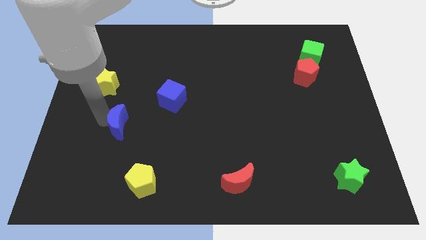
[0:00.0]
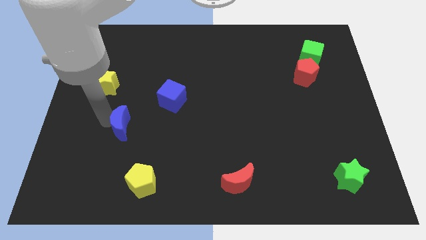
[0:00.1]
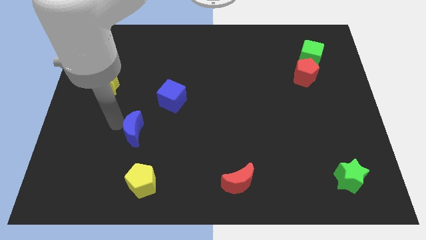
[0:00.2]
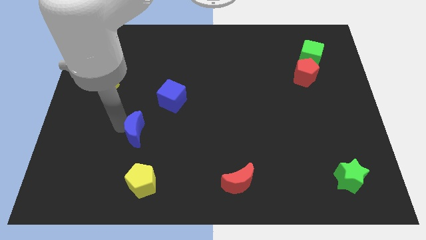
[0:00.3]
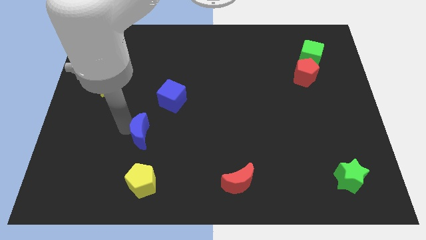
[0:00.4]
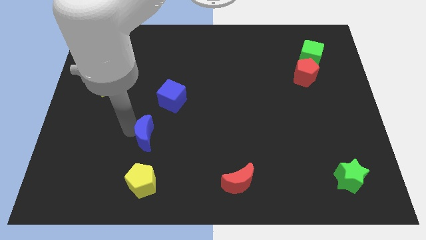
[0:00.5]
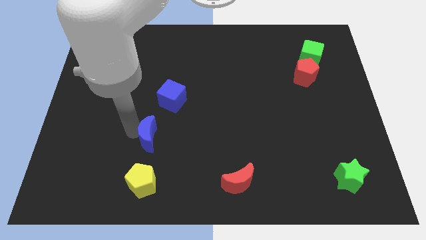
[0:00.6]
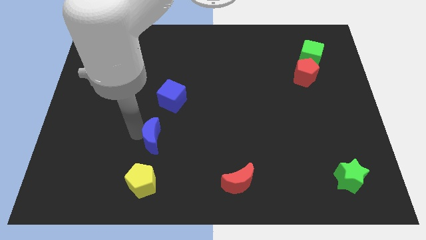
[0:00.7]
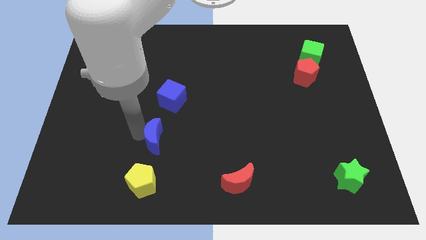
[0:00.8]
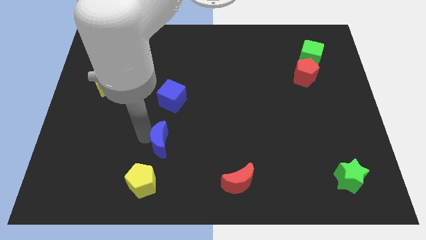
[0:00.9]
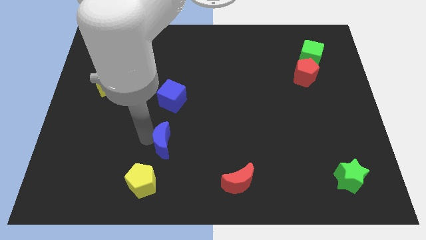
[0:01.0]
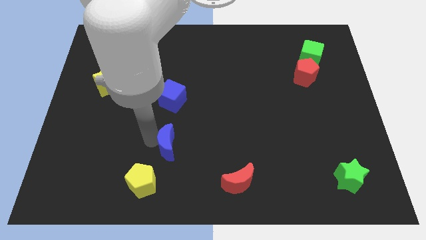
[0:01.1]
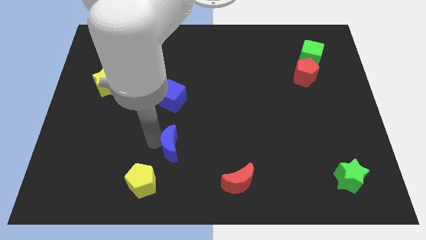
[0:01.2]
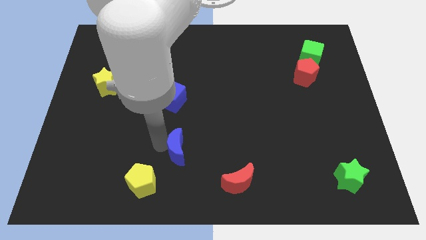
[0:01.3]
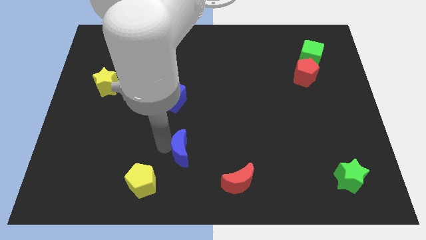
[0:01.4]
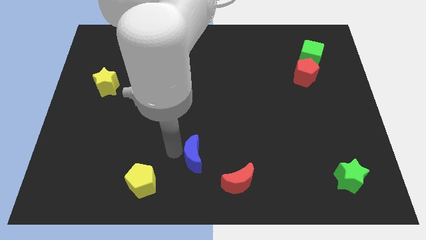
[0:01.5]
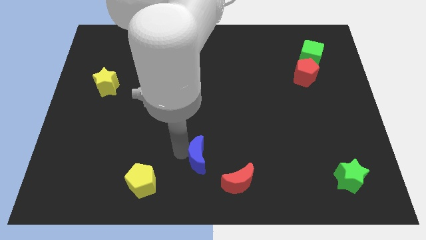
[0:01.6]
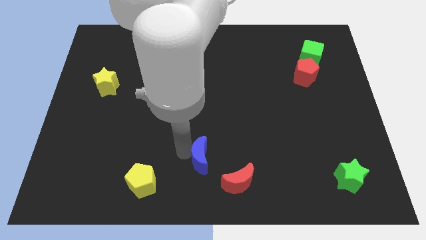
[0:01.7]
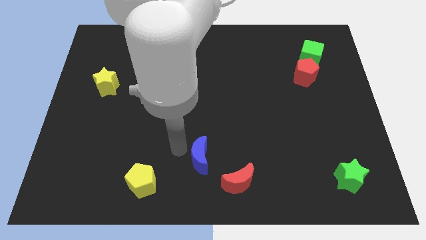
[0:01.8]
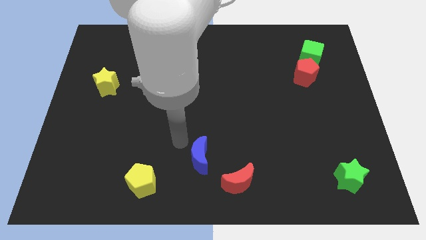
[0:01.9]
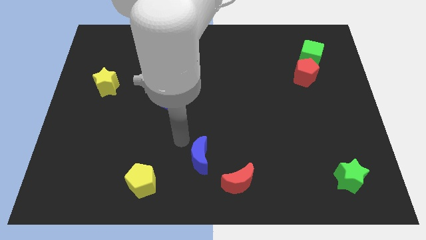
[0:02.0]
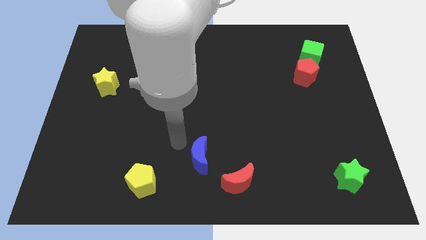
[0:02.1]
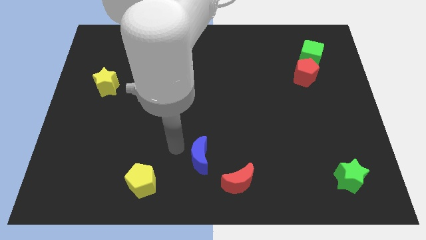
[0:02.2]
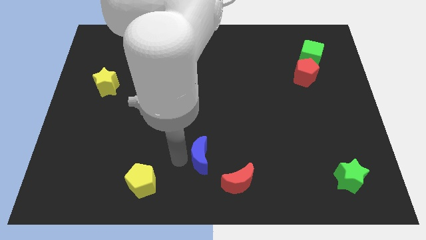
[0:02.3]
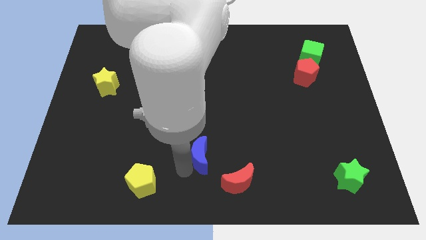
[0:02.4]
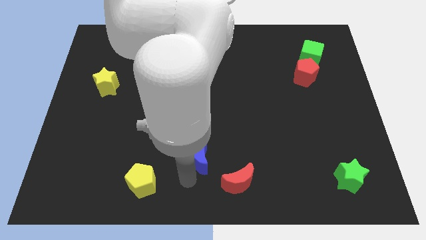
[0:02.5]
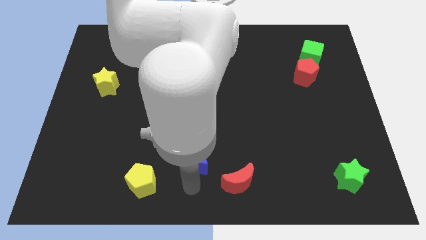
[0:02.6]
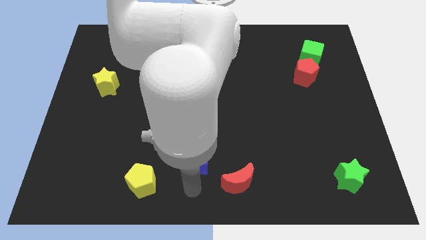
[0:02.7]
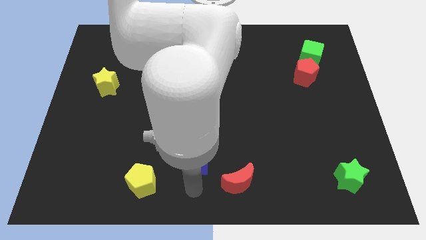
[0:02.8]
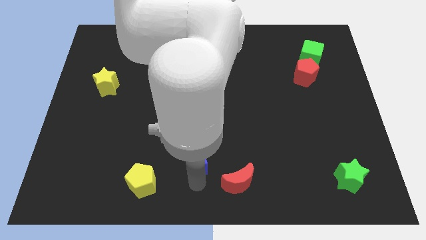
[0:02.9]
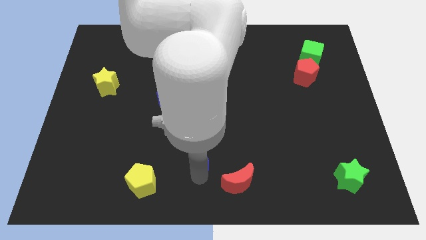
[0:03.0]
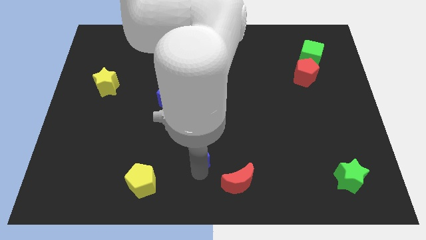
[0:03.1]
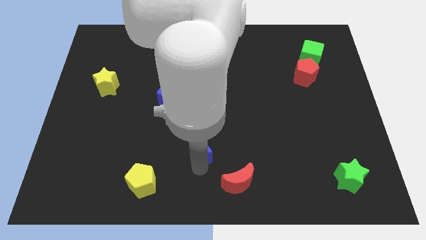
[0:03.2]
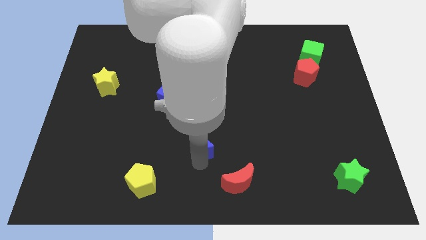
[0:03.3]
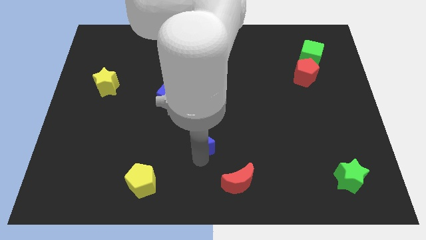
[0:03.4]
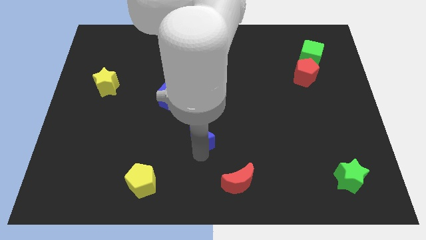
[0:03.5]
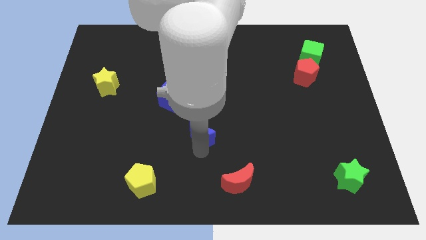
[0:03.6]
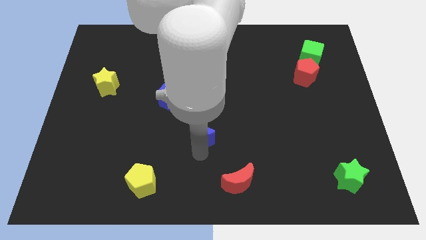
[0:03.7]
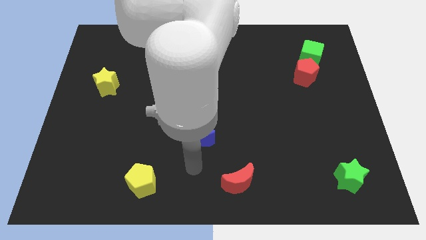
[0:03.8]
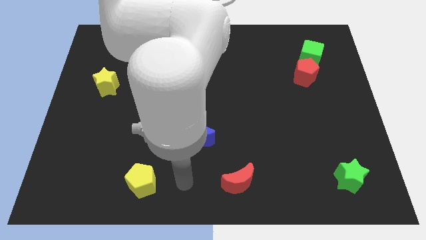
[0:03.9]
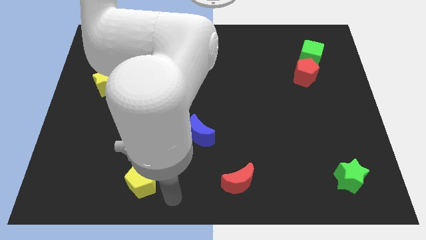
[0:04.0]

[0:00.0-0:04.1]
place blue crescent in between blue cube and red crescent

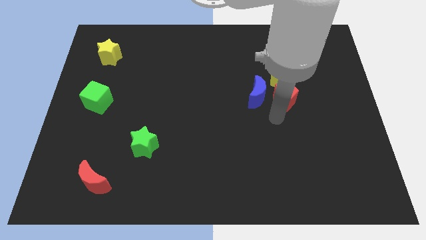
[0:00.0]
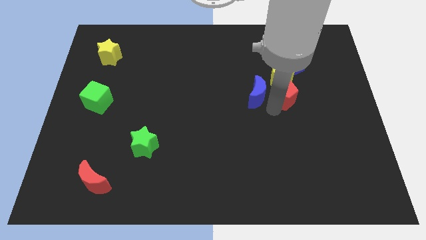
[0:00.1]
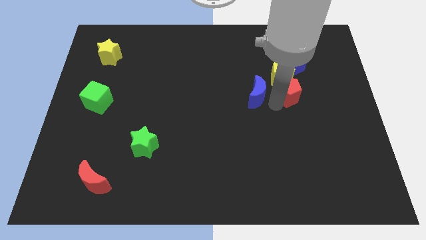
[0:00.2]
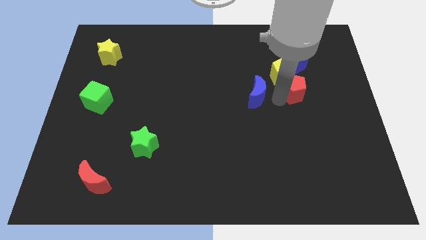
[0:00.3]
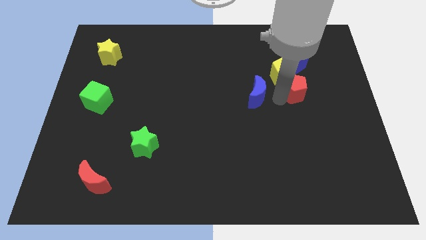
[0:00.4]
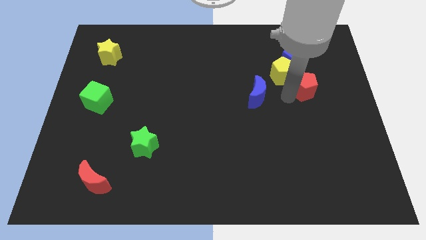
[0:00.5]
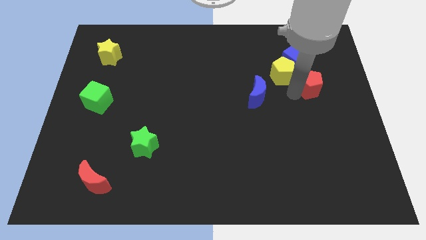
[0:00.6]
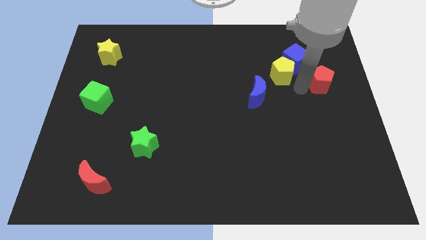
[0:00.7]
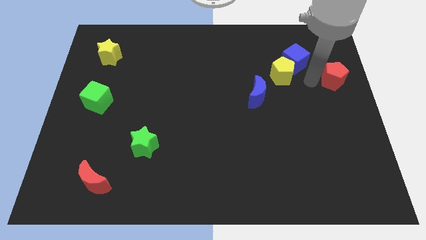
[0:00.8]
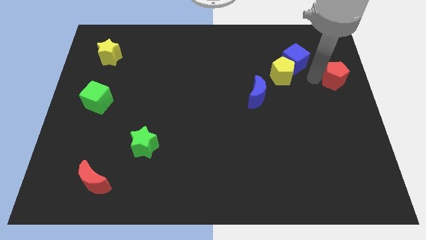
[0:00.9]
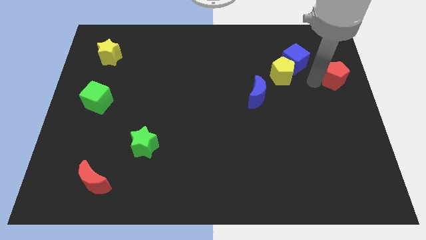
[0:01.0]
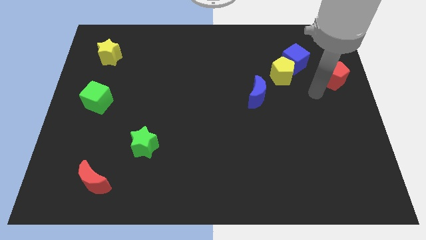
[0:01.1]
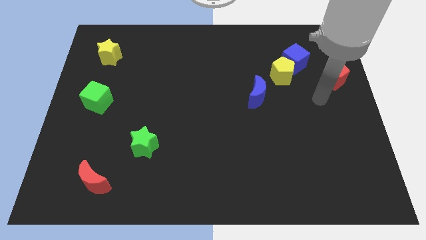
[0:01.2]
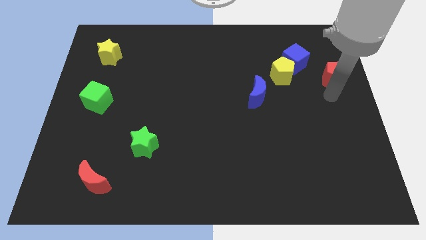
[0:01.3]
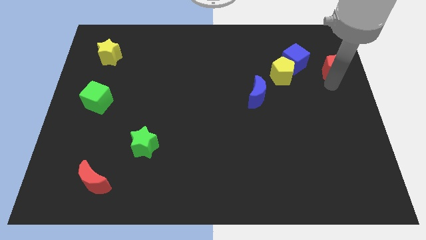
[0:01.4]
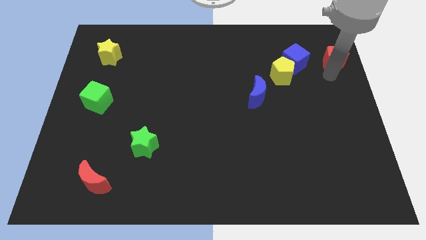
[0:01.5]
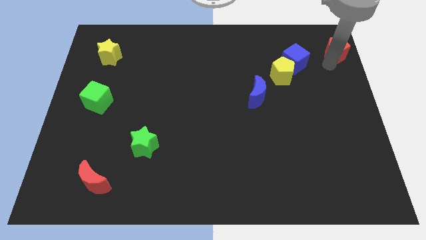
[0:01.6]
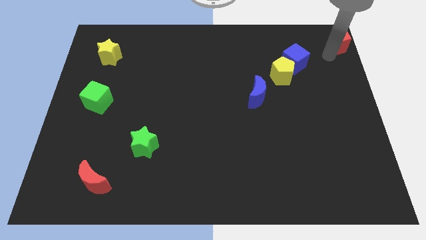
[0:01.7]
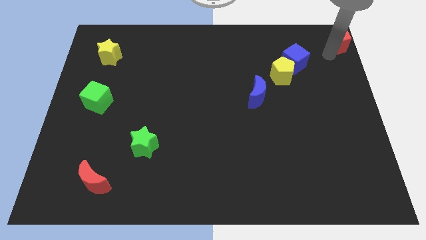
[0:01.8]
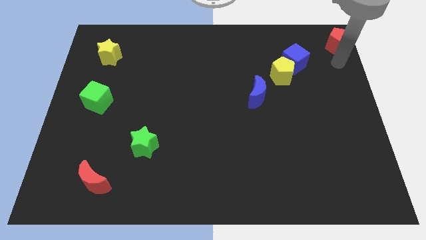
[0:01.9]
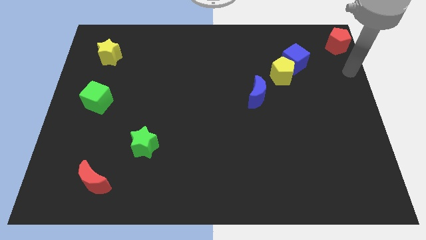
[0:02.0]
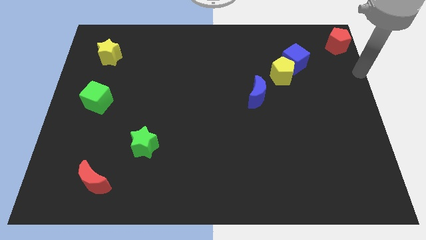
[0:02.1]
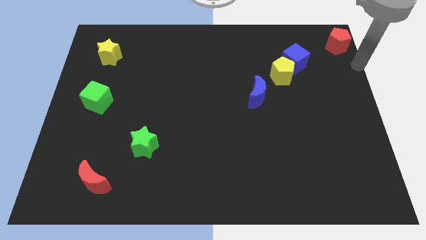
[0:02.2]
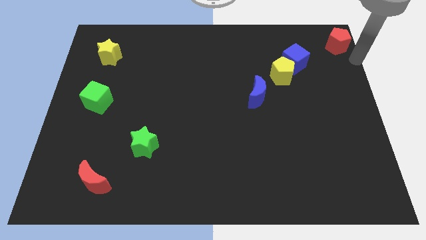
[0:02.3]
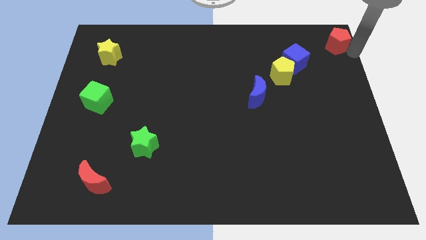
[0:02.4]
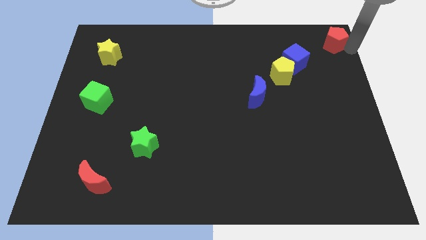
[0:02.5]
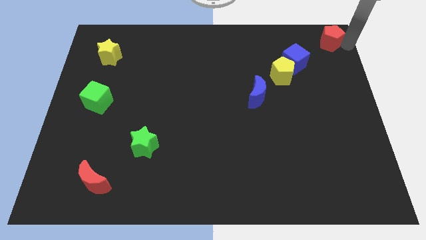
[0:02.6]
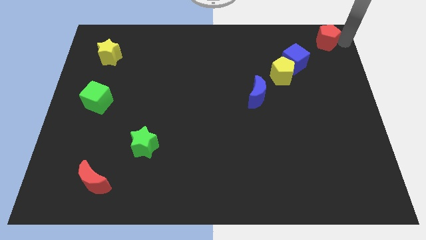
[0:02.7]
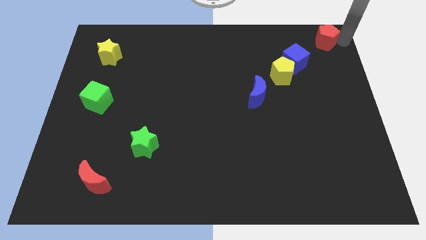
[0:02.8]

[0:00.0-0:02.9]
place the red pentagon above to the blue cube

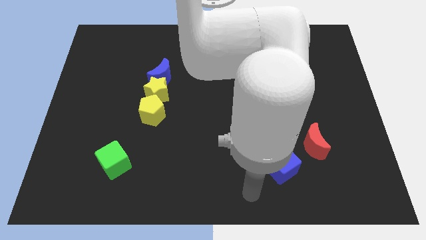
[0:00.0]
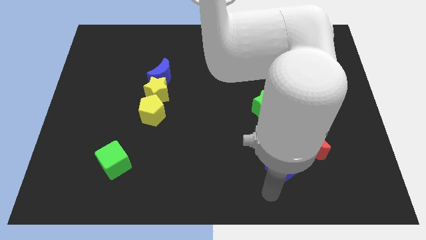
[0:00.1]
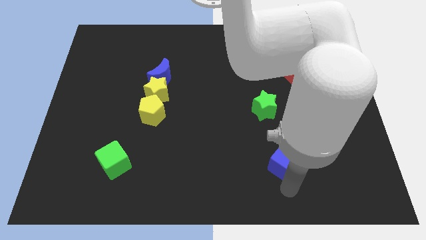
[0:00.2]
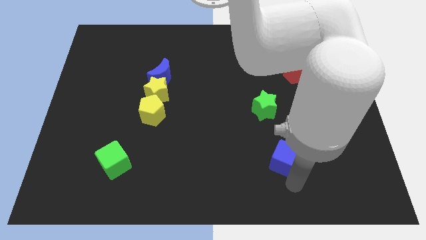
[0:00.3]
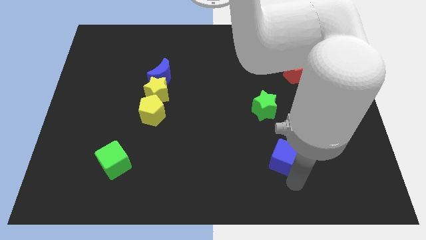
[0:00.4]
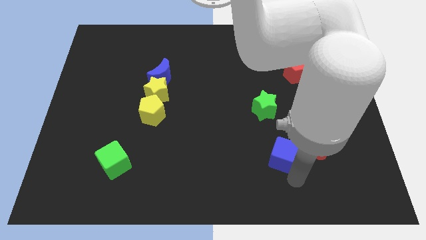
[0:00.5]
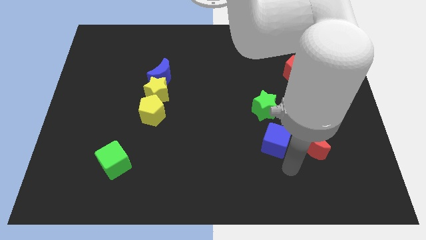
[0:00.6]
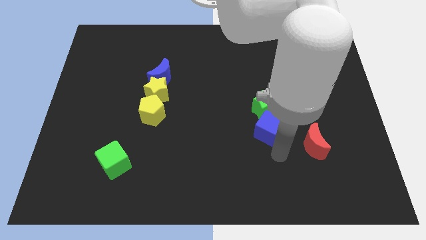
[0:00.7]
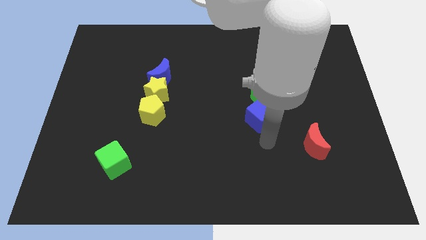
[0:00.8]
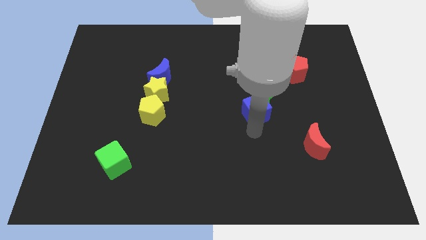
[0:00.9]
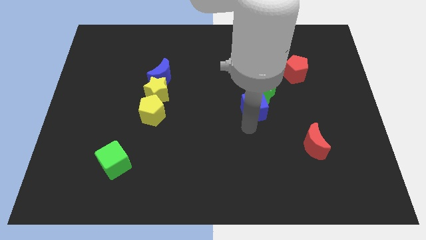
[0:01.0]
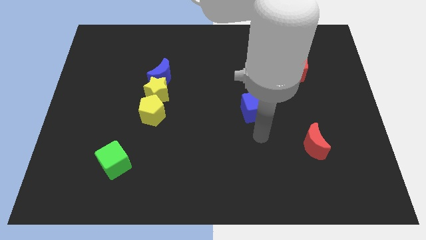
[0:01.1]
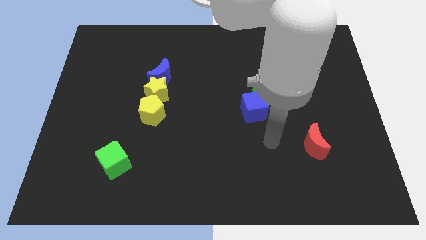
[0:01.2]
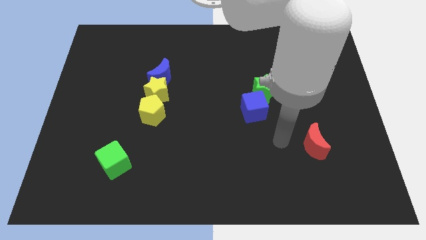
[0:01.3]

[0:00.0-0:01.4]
move the blue cube into the green star

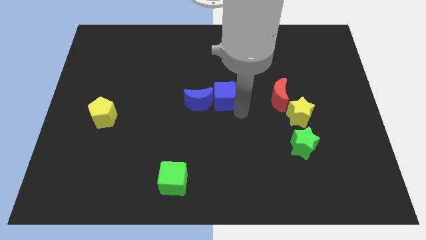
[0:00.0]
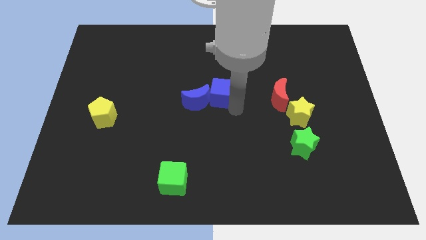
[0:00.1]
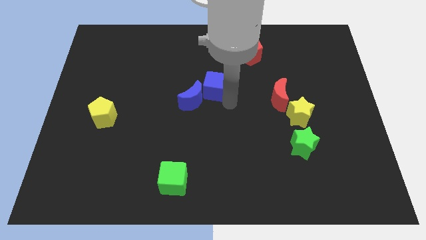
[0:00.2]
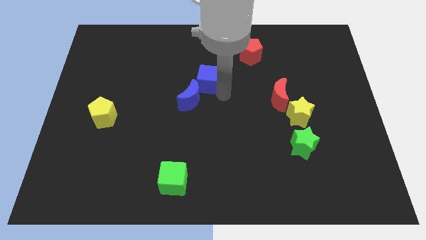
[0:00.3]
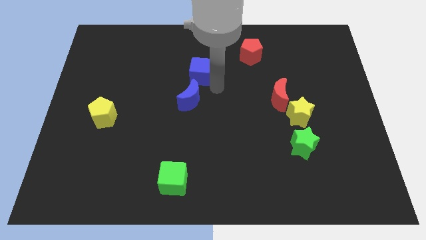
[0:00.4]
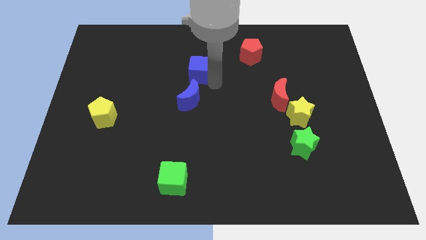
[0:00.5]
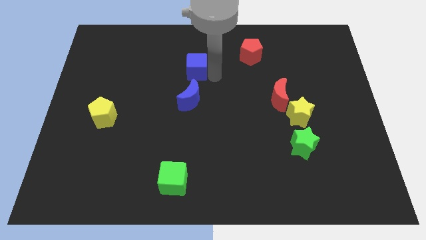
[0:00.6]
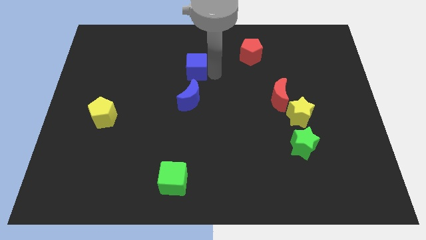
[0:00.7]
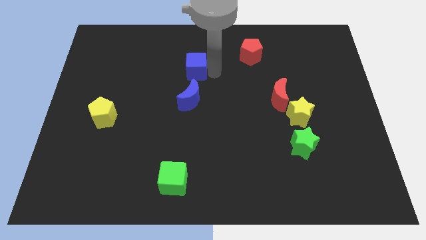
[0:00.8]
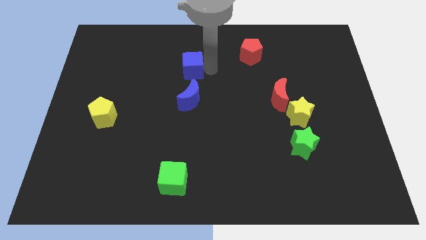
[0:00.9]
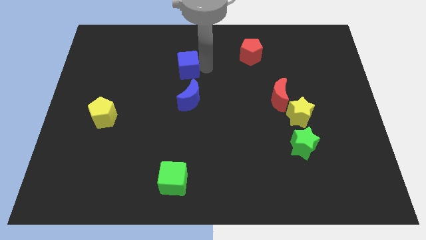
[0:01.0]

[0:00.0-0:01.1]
move the blue cube slightly top to the blue moon
